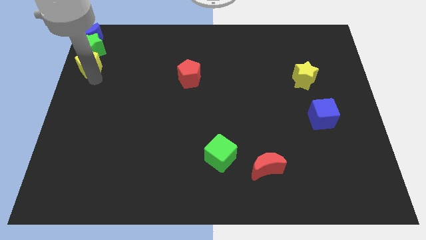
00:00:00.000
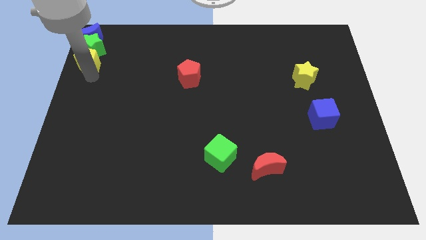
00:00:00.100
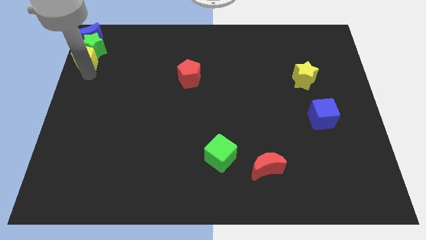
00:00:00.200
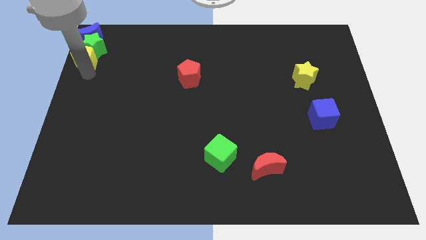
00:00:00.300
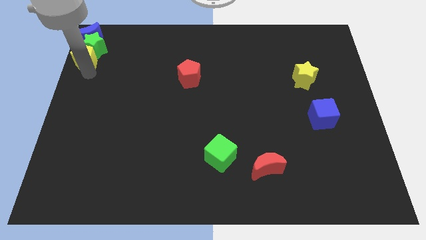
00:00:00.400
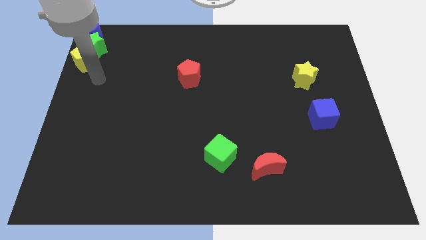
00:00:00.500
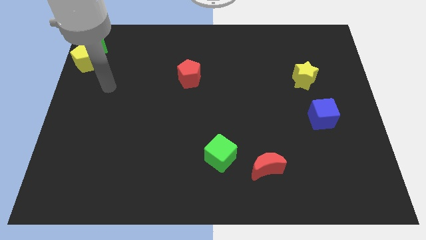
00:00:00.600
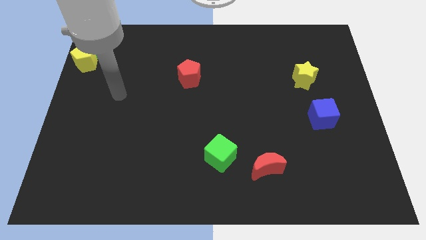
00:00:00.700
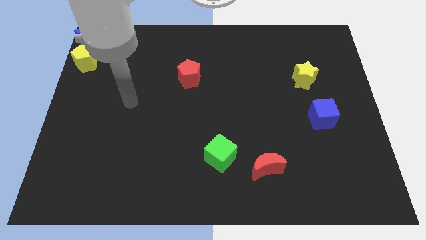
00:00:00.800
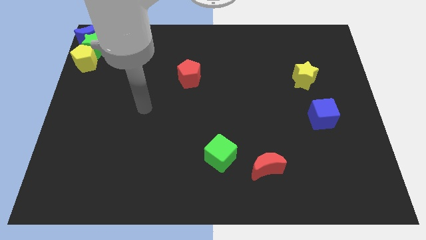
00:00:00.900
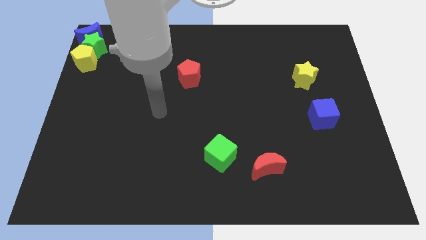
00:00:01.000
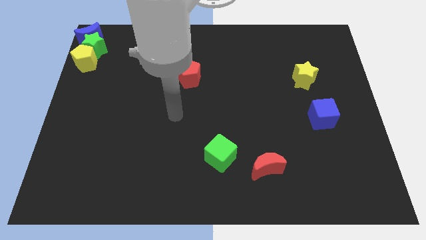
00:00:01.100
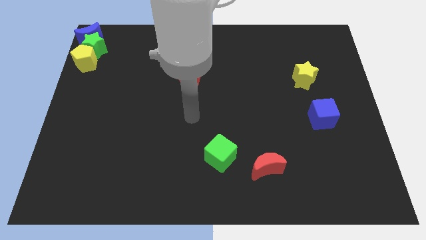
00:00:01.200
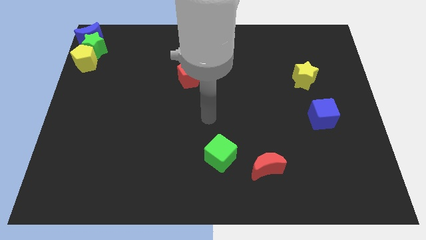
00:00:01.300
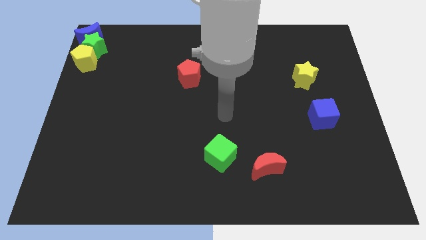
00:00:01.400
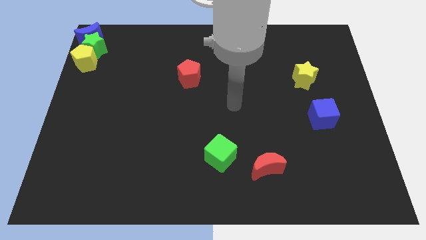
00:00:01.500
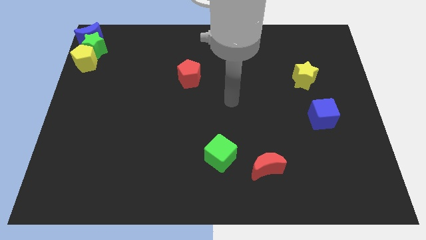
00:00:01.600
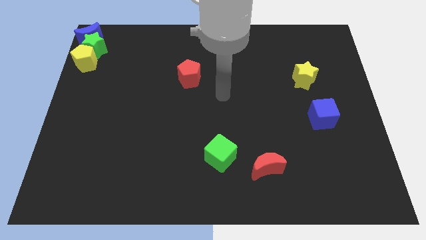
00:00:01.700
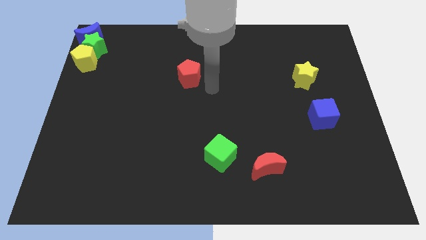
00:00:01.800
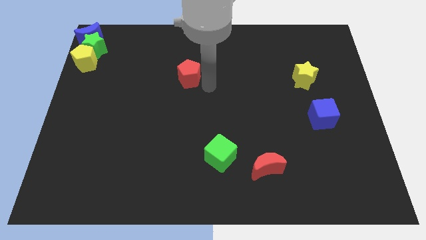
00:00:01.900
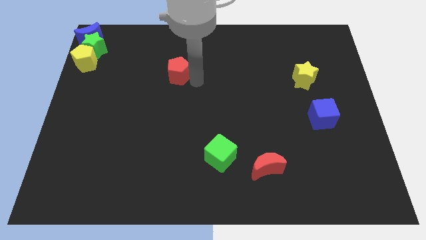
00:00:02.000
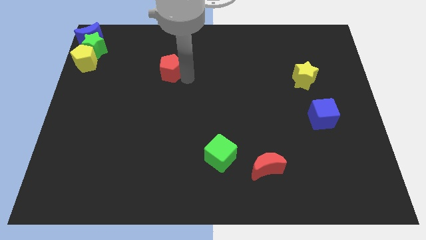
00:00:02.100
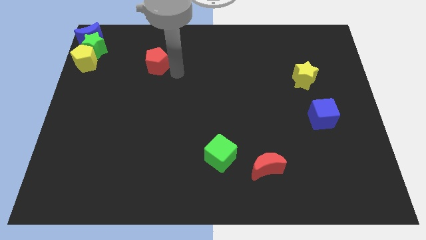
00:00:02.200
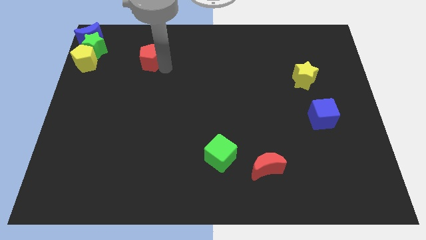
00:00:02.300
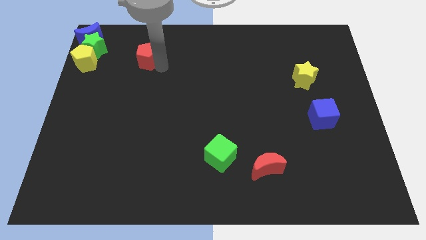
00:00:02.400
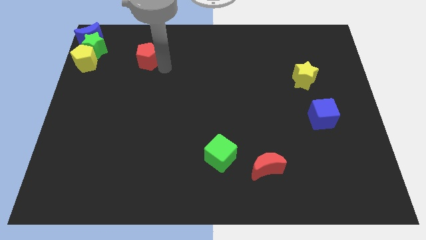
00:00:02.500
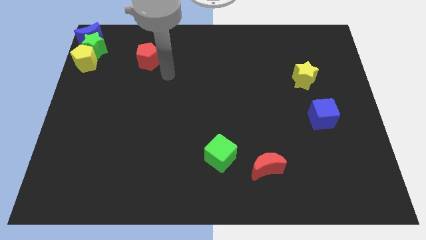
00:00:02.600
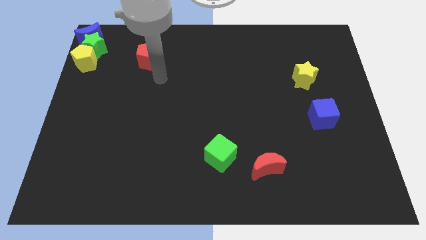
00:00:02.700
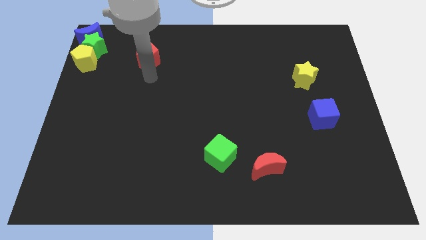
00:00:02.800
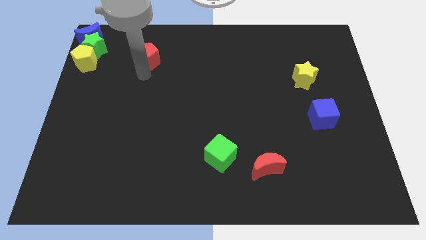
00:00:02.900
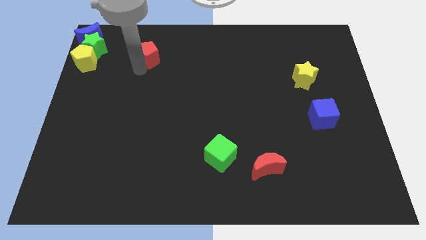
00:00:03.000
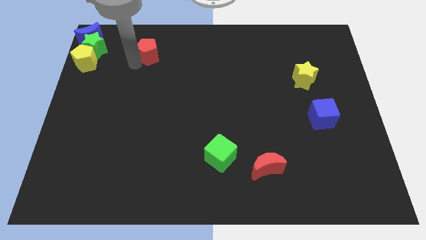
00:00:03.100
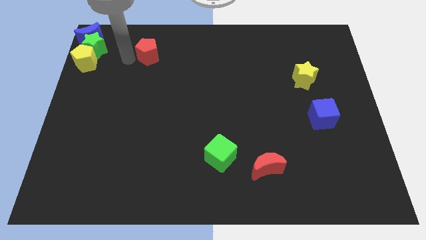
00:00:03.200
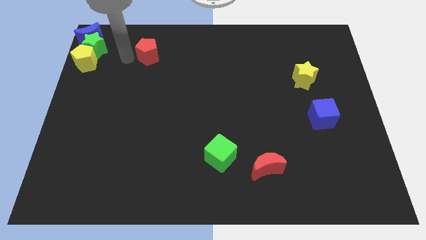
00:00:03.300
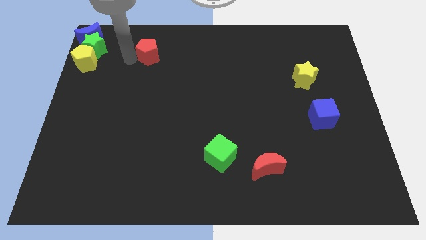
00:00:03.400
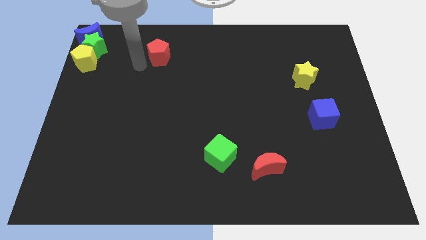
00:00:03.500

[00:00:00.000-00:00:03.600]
move the red pentagon to the right side of the green star

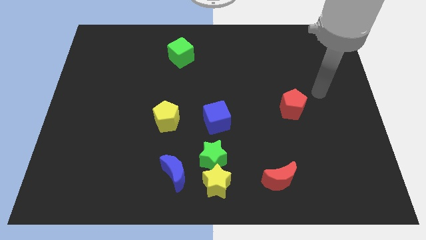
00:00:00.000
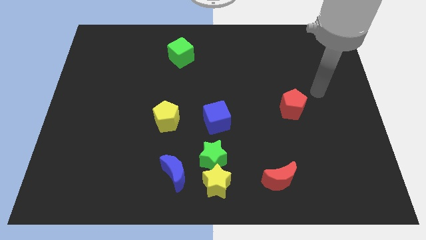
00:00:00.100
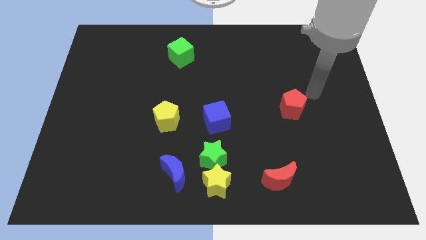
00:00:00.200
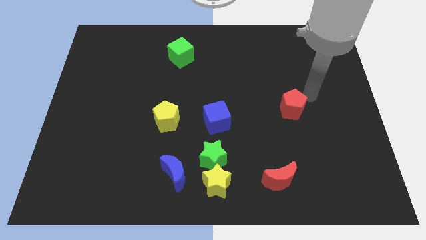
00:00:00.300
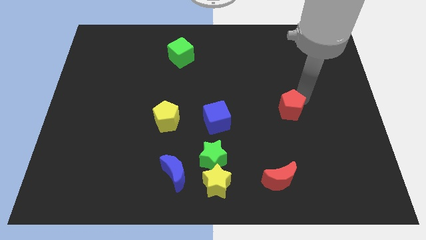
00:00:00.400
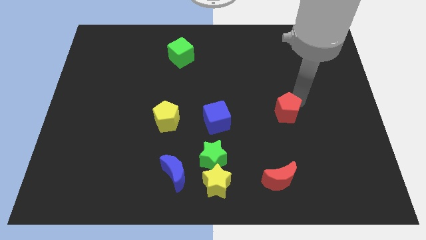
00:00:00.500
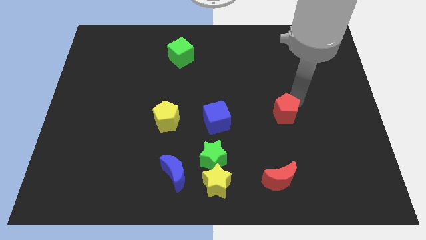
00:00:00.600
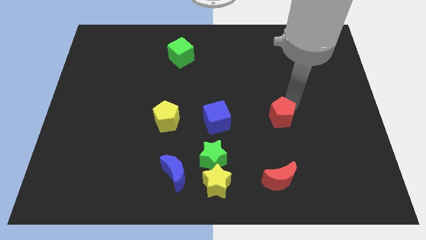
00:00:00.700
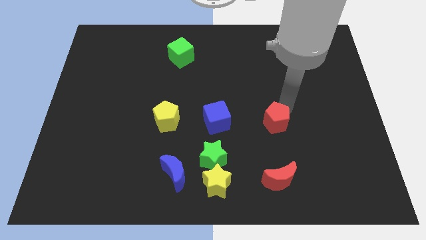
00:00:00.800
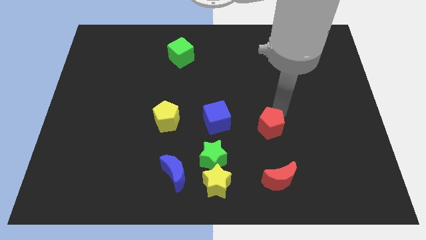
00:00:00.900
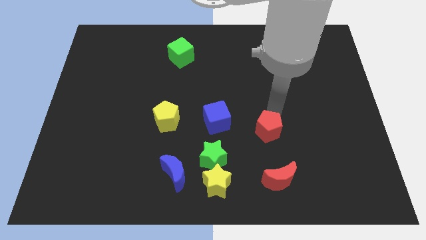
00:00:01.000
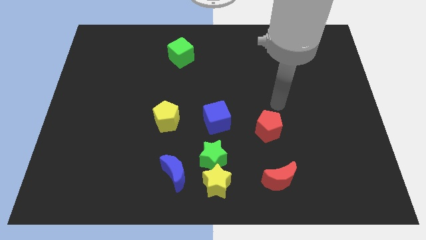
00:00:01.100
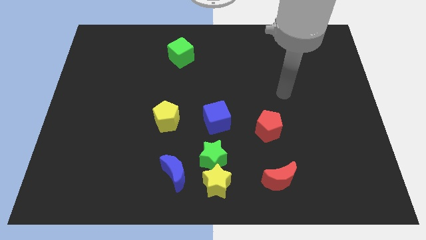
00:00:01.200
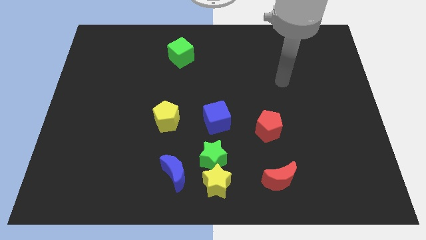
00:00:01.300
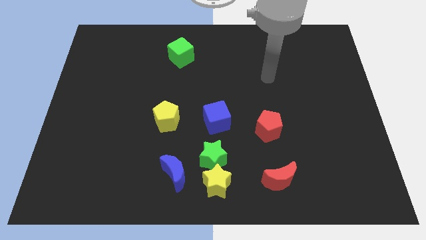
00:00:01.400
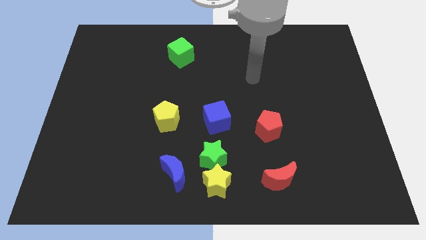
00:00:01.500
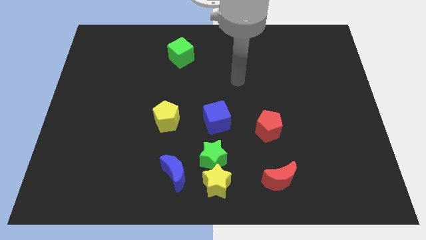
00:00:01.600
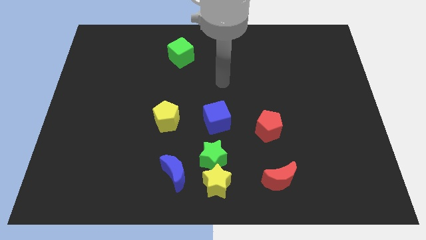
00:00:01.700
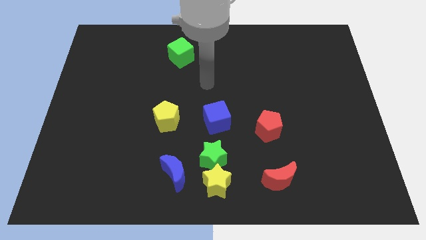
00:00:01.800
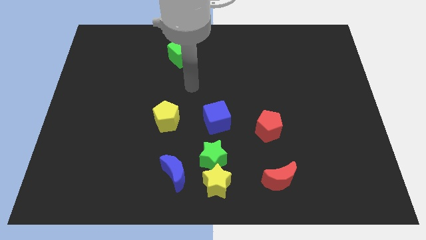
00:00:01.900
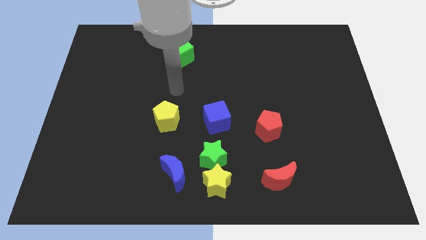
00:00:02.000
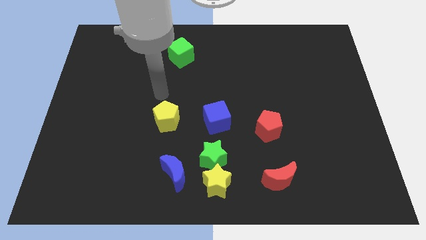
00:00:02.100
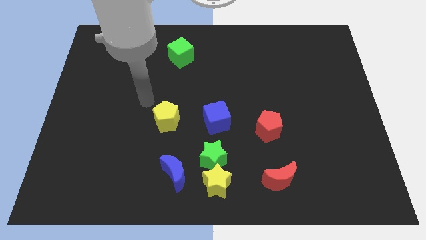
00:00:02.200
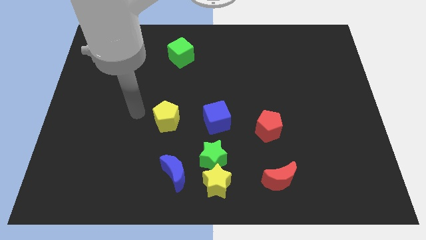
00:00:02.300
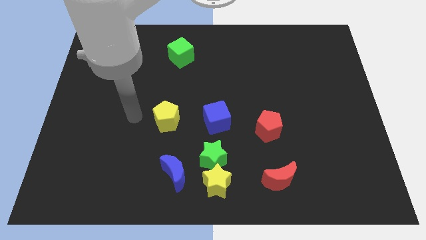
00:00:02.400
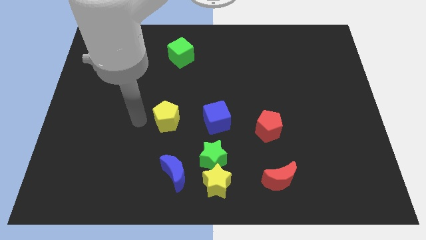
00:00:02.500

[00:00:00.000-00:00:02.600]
move the red pentagon diagonally to the top right side of the green star

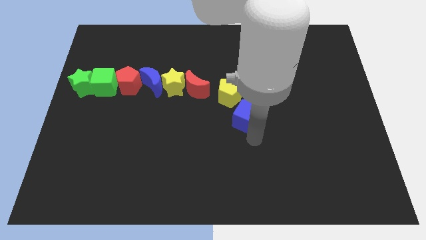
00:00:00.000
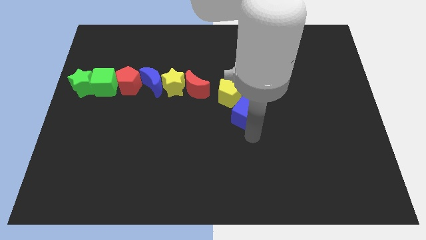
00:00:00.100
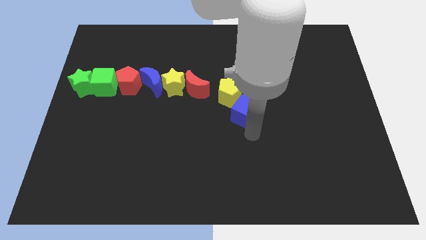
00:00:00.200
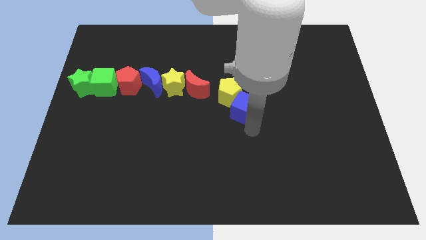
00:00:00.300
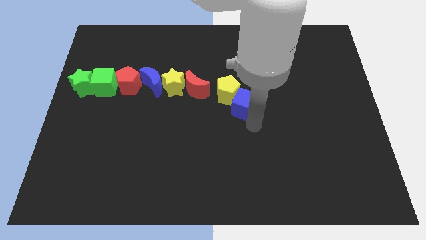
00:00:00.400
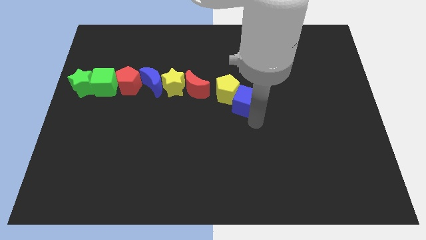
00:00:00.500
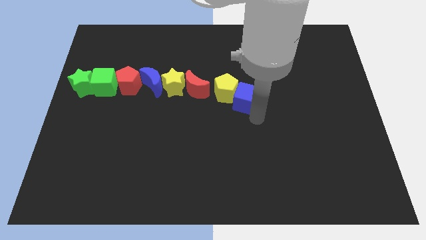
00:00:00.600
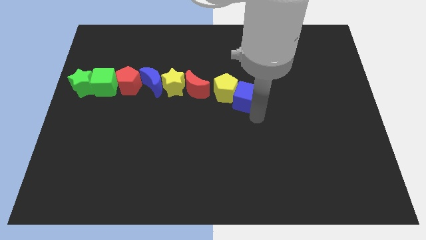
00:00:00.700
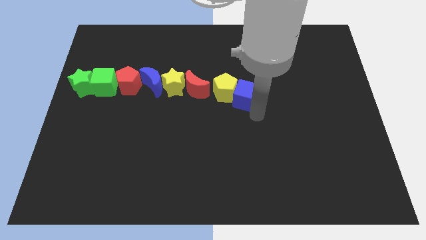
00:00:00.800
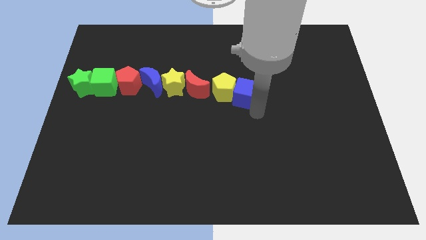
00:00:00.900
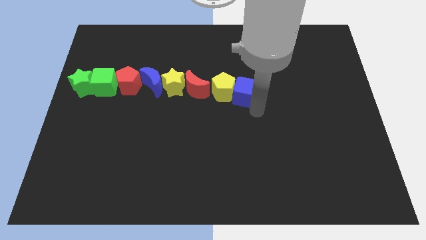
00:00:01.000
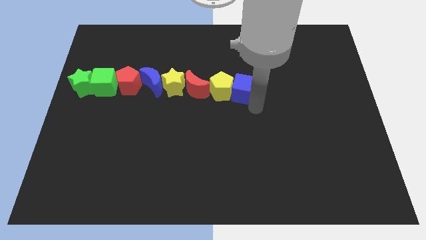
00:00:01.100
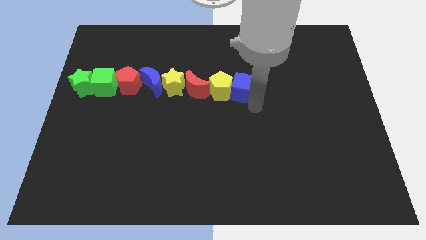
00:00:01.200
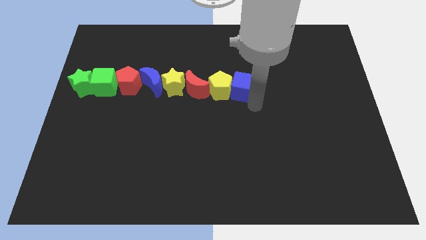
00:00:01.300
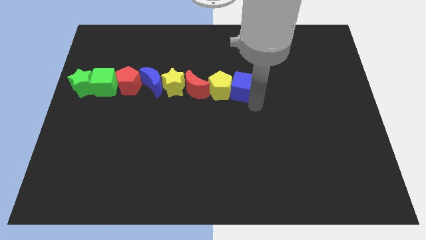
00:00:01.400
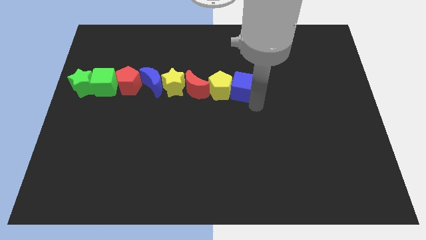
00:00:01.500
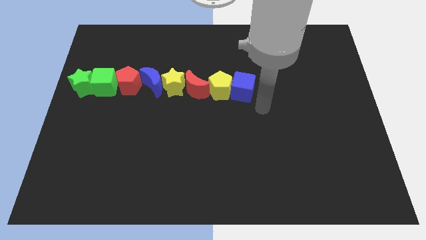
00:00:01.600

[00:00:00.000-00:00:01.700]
move the blue cube close to the right of the yellow pentagon

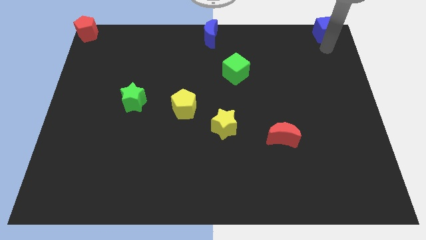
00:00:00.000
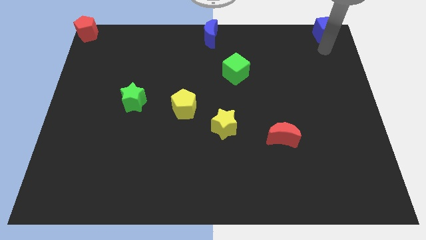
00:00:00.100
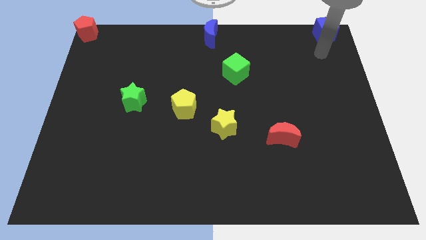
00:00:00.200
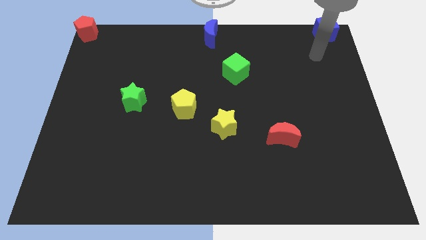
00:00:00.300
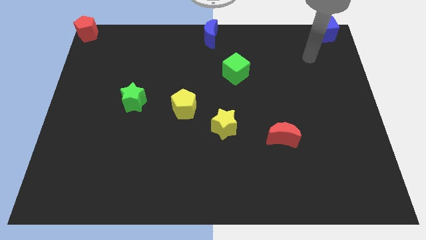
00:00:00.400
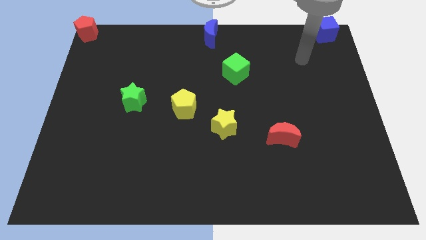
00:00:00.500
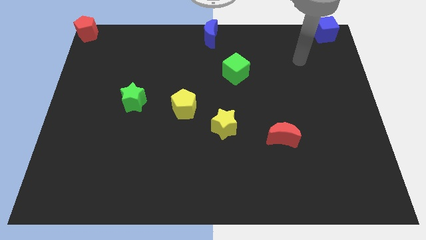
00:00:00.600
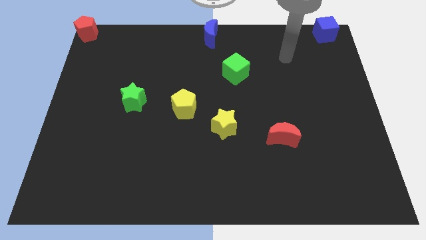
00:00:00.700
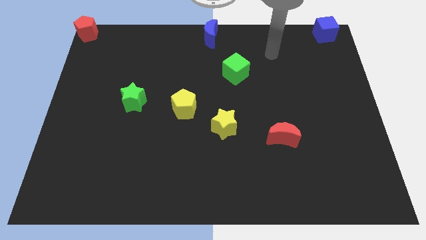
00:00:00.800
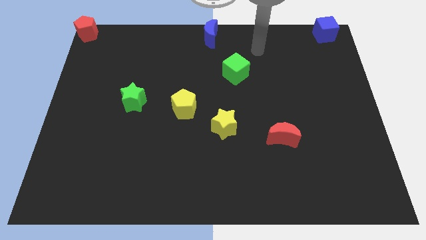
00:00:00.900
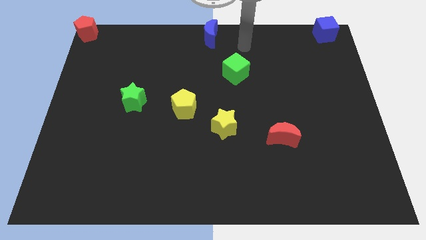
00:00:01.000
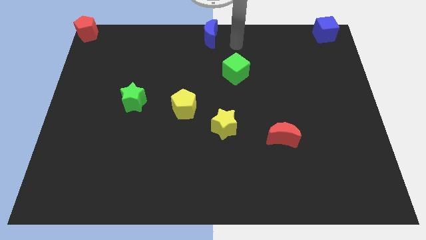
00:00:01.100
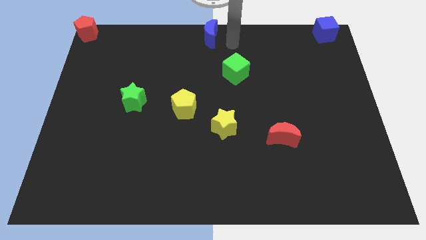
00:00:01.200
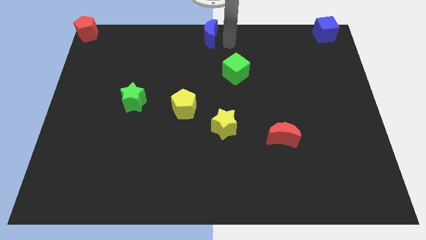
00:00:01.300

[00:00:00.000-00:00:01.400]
point your arm at the top of green cube
